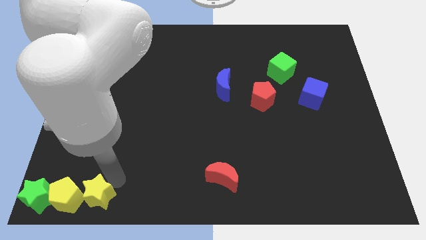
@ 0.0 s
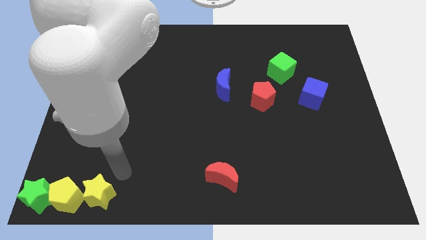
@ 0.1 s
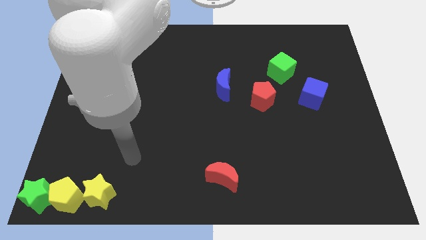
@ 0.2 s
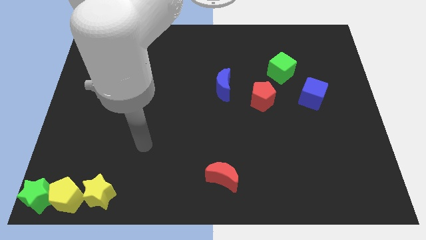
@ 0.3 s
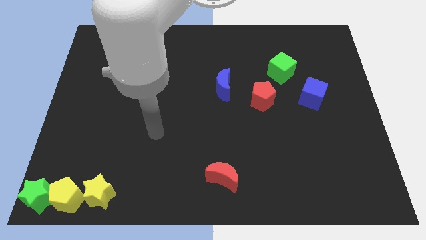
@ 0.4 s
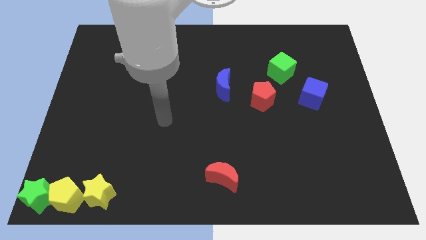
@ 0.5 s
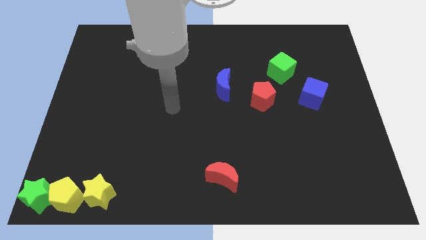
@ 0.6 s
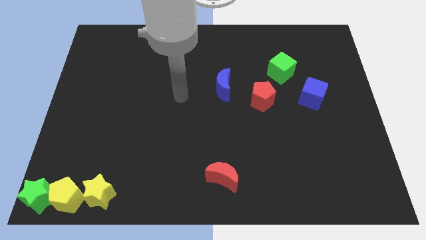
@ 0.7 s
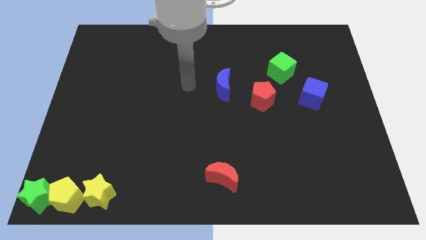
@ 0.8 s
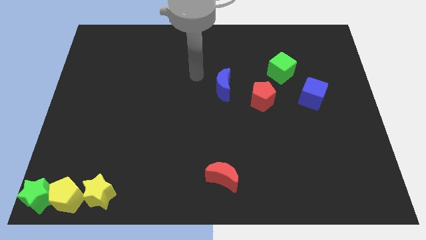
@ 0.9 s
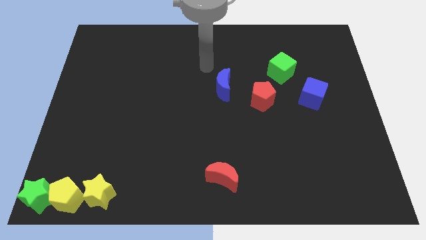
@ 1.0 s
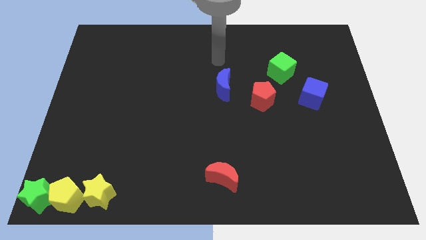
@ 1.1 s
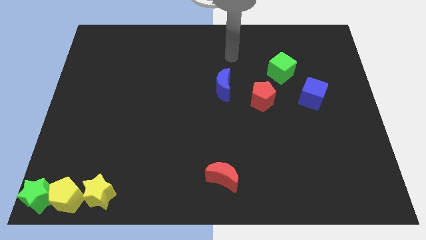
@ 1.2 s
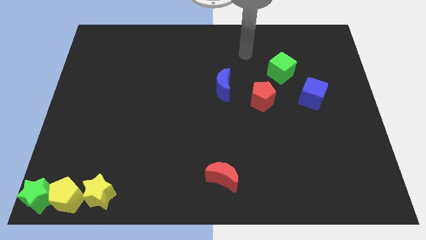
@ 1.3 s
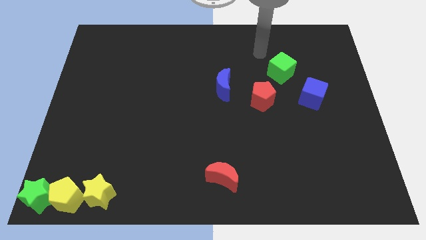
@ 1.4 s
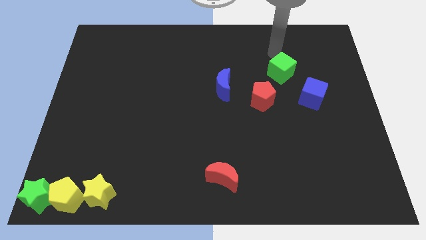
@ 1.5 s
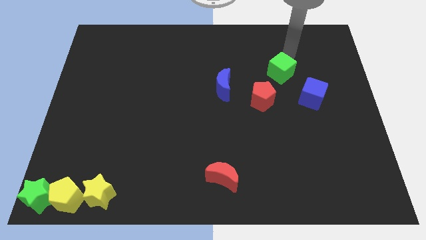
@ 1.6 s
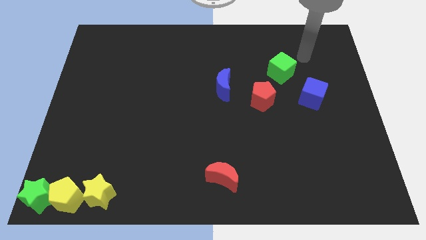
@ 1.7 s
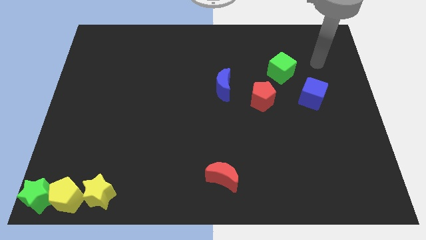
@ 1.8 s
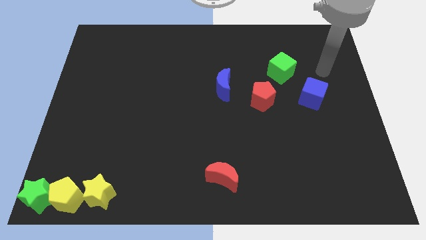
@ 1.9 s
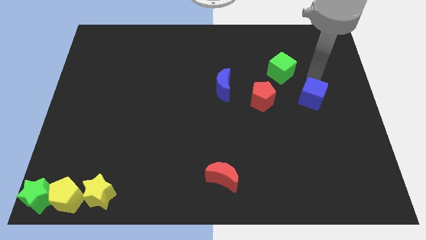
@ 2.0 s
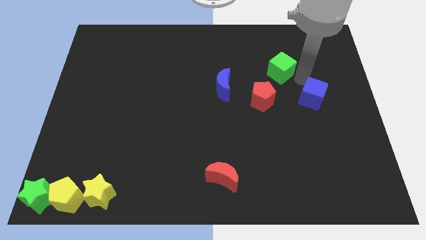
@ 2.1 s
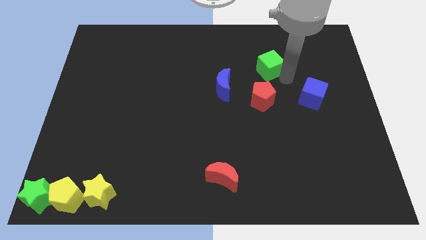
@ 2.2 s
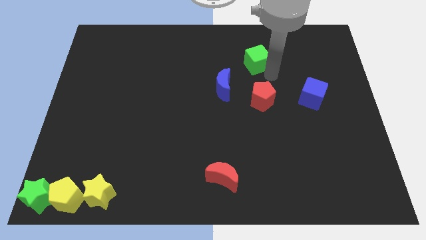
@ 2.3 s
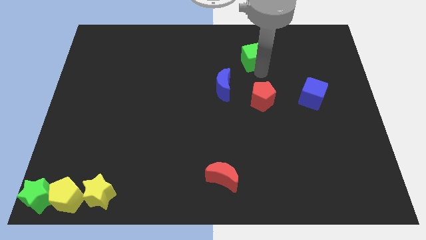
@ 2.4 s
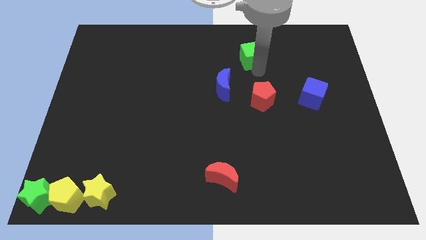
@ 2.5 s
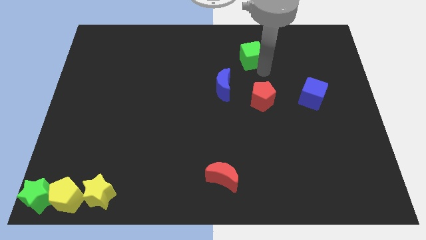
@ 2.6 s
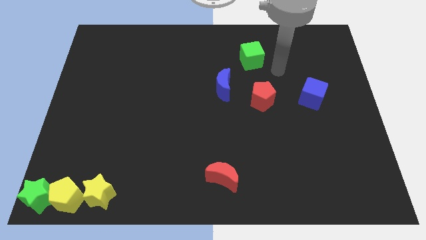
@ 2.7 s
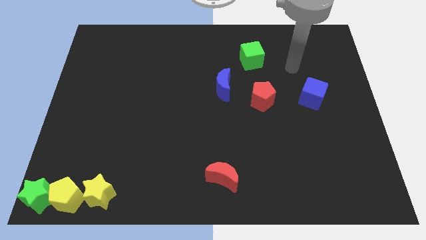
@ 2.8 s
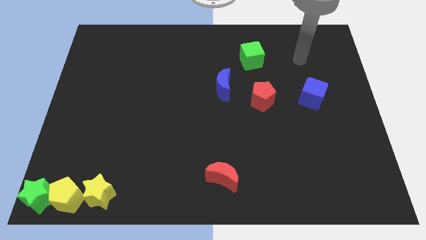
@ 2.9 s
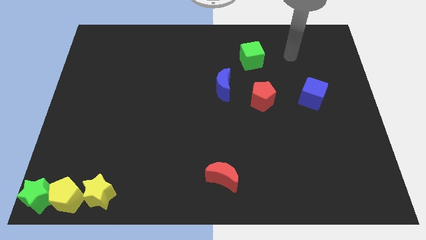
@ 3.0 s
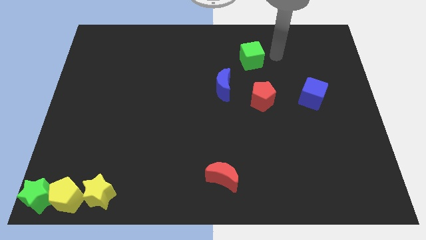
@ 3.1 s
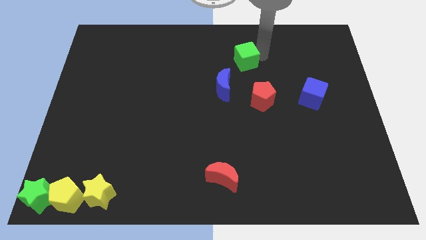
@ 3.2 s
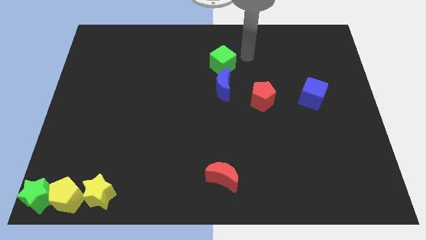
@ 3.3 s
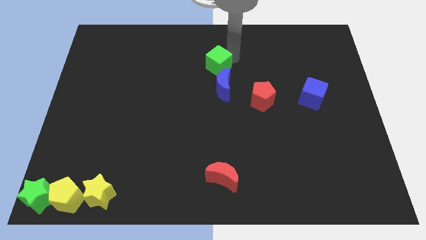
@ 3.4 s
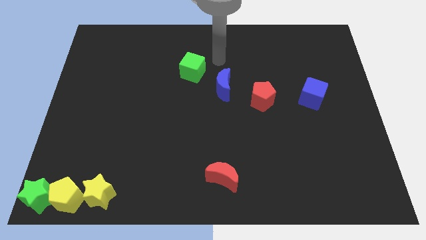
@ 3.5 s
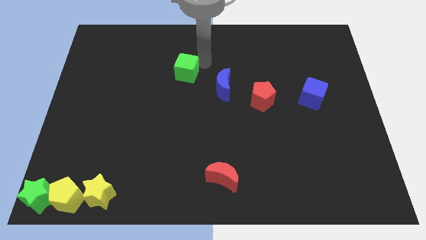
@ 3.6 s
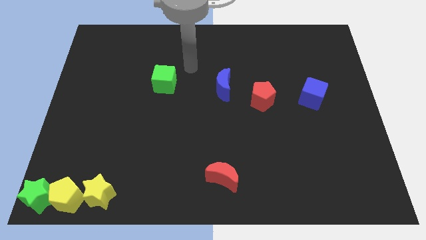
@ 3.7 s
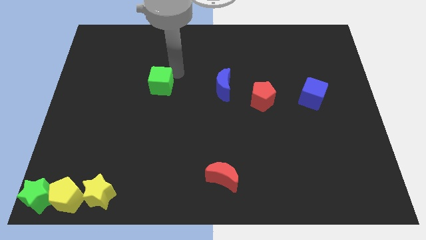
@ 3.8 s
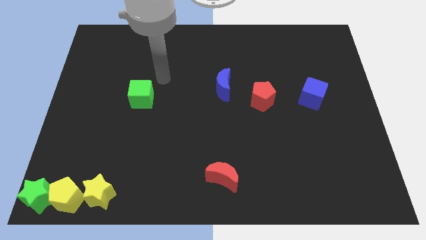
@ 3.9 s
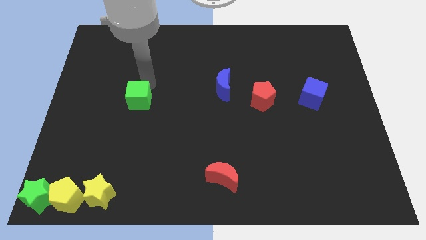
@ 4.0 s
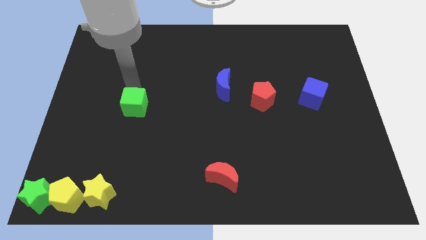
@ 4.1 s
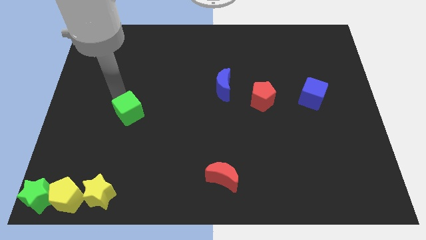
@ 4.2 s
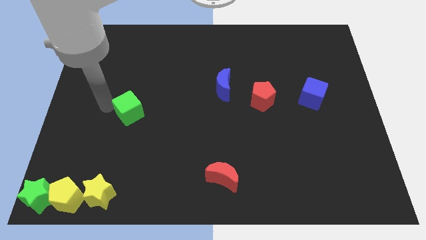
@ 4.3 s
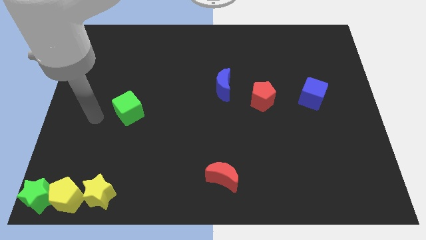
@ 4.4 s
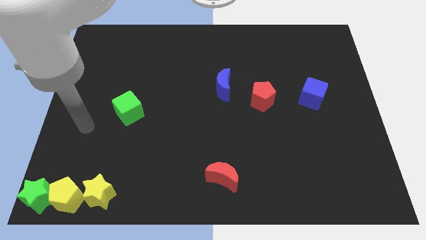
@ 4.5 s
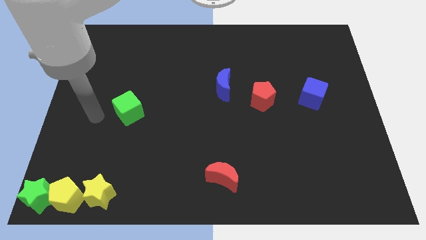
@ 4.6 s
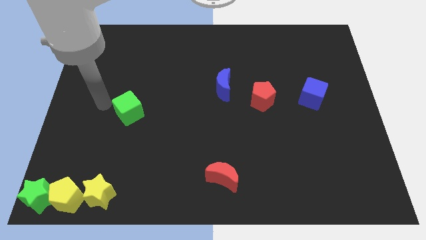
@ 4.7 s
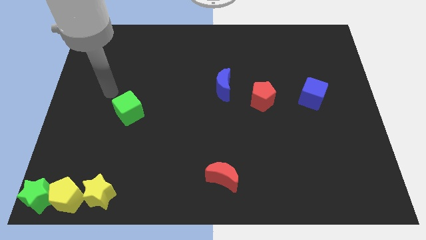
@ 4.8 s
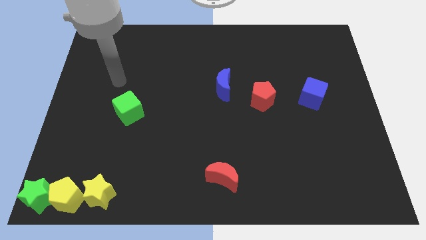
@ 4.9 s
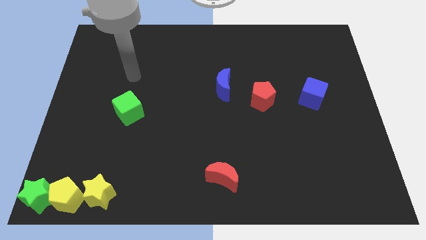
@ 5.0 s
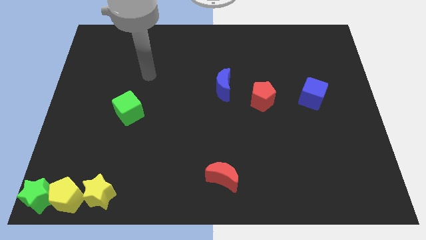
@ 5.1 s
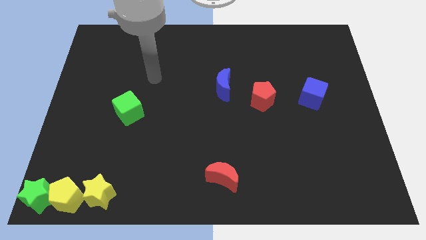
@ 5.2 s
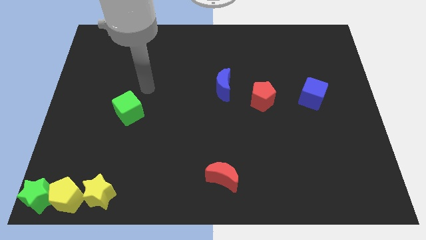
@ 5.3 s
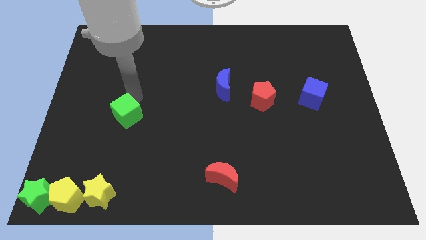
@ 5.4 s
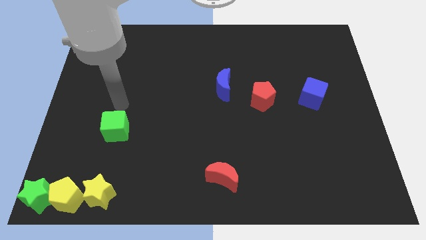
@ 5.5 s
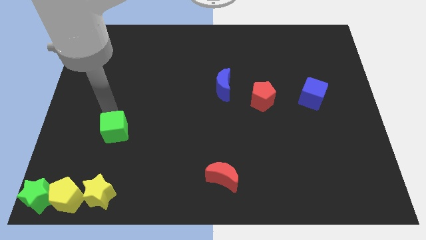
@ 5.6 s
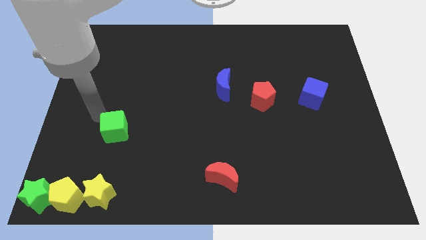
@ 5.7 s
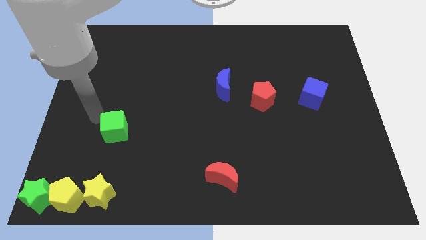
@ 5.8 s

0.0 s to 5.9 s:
move the green cube diagonally left of the red moon

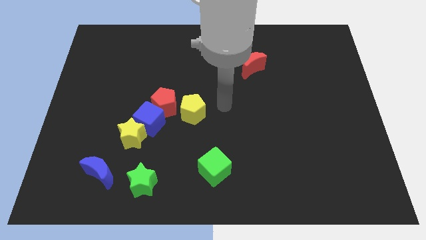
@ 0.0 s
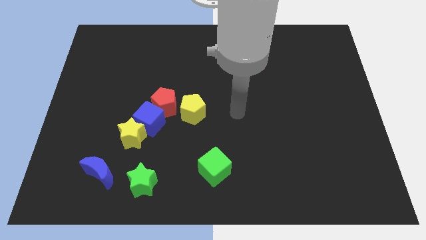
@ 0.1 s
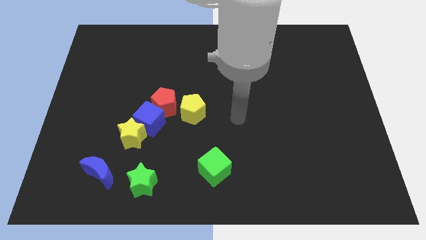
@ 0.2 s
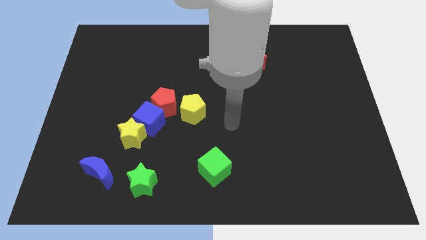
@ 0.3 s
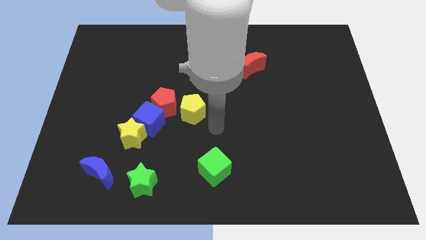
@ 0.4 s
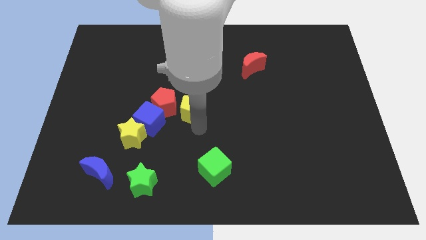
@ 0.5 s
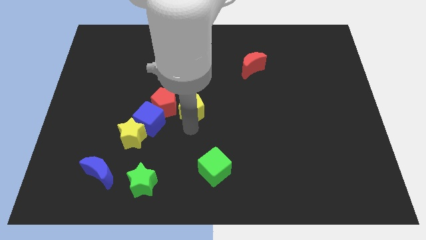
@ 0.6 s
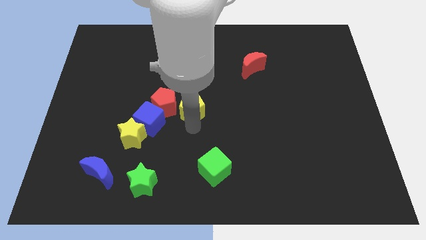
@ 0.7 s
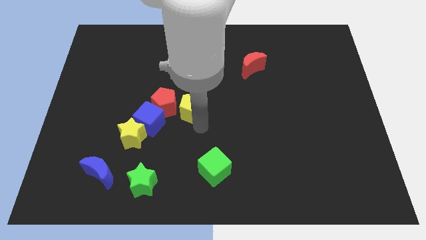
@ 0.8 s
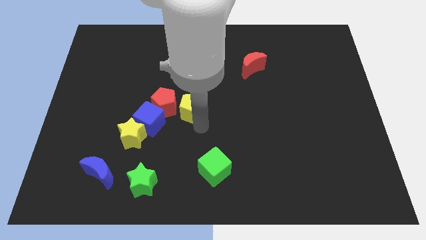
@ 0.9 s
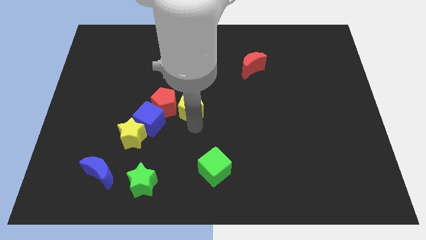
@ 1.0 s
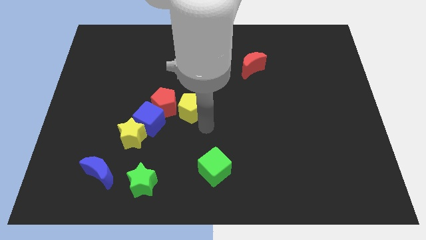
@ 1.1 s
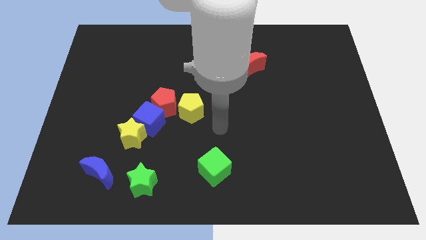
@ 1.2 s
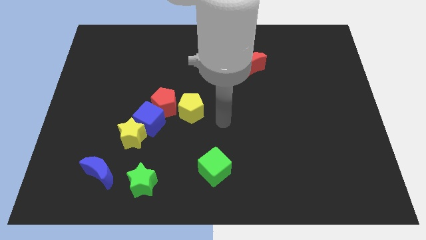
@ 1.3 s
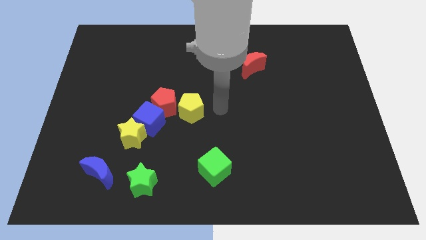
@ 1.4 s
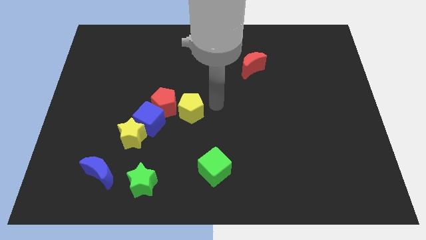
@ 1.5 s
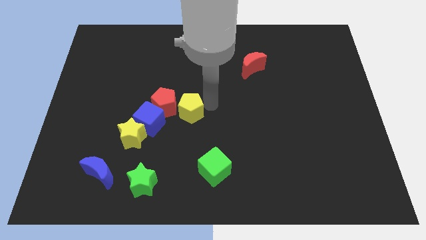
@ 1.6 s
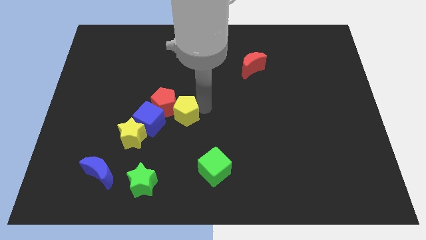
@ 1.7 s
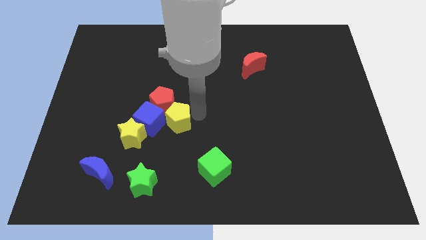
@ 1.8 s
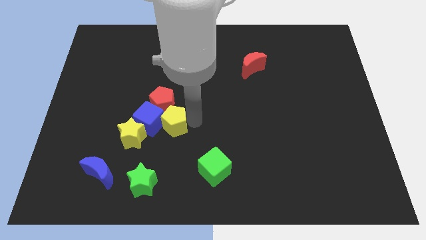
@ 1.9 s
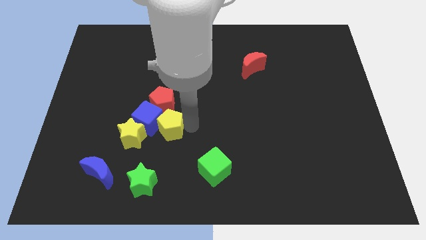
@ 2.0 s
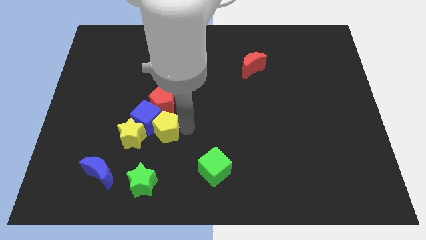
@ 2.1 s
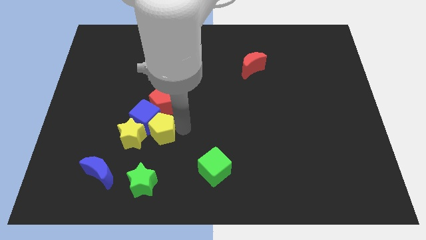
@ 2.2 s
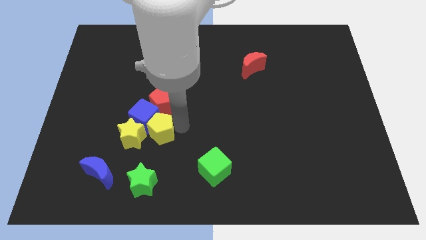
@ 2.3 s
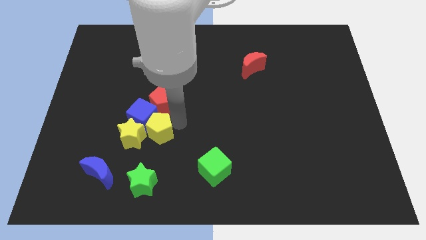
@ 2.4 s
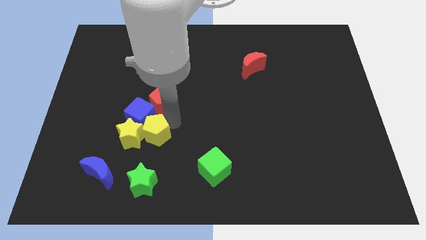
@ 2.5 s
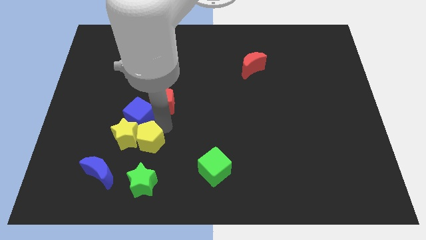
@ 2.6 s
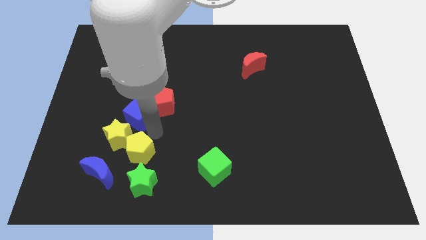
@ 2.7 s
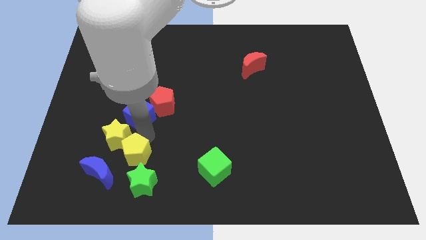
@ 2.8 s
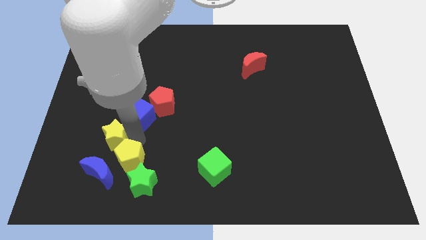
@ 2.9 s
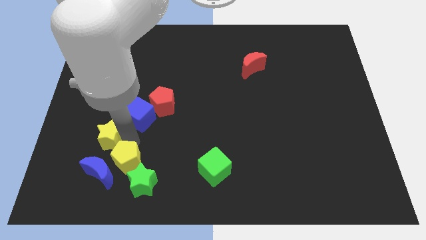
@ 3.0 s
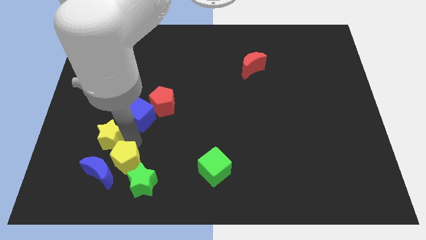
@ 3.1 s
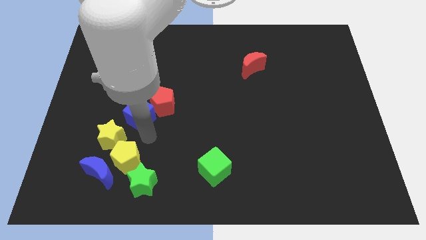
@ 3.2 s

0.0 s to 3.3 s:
place the yellow pentagon in between the yellow star and green star
